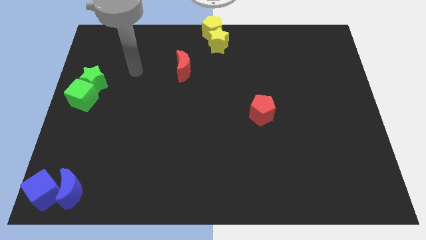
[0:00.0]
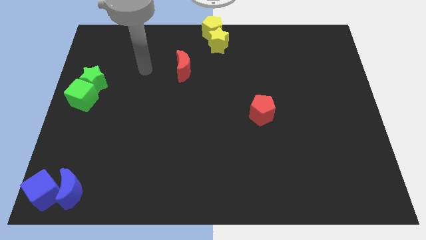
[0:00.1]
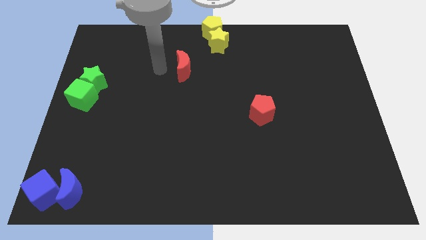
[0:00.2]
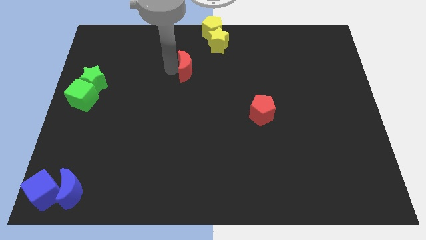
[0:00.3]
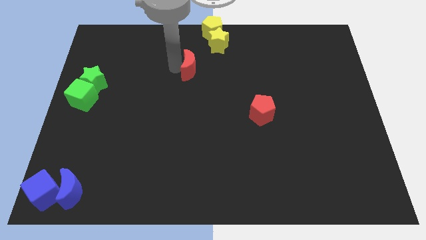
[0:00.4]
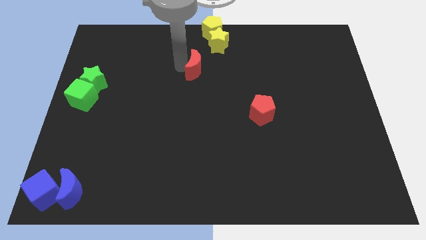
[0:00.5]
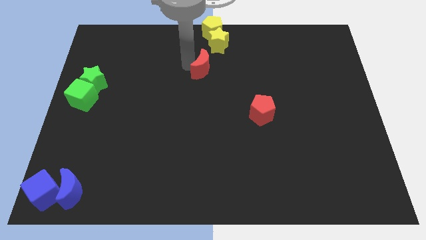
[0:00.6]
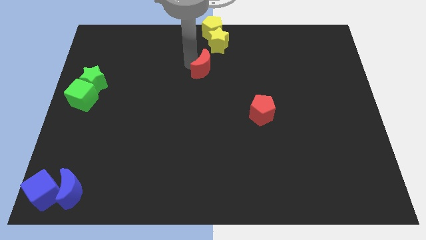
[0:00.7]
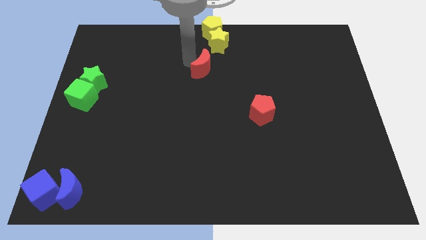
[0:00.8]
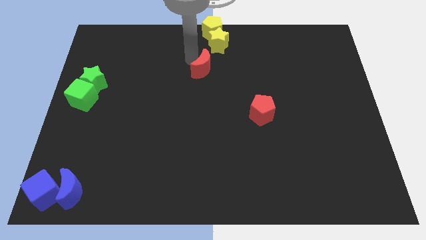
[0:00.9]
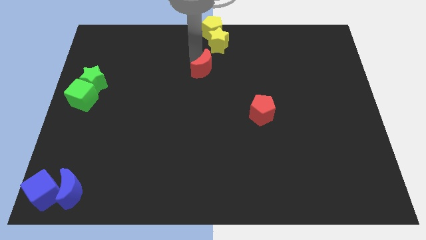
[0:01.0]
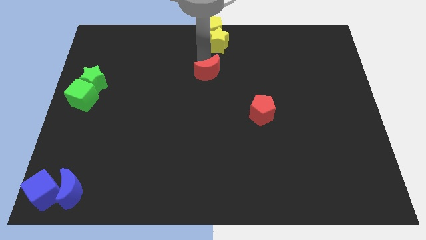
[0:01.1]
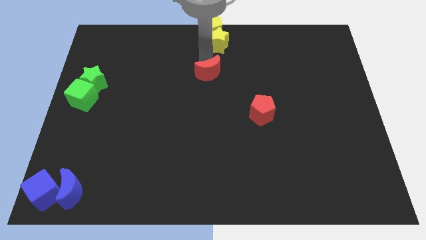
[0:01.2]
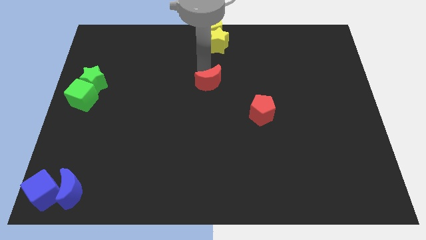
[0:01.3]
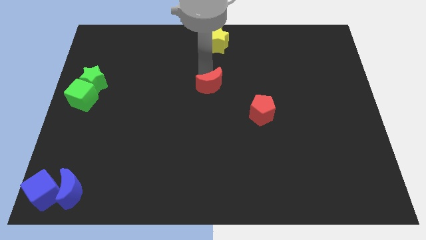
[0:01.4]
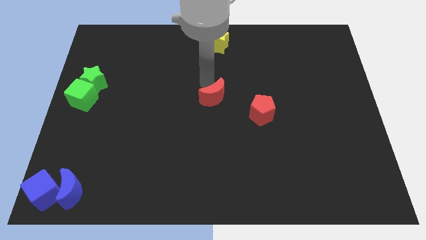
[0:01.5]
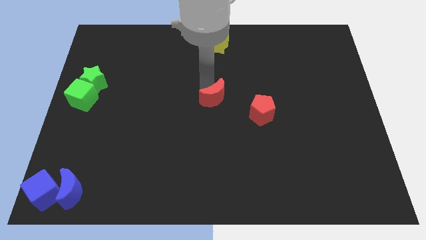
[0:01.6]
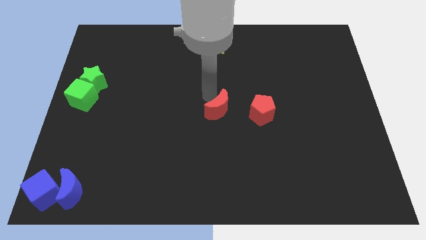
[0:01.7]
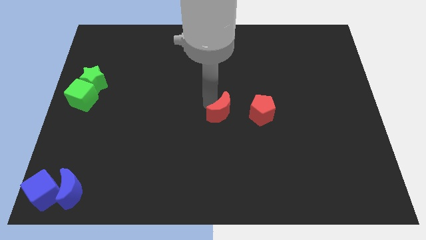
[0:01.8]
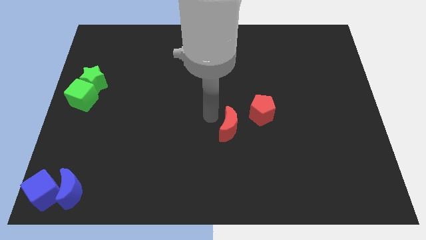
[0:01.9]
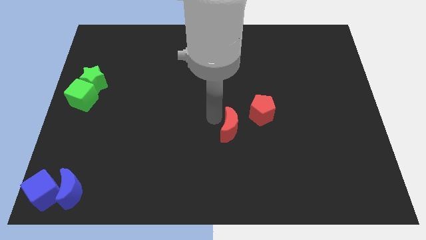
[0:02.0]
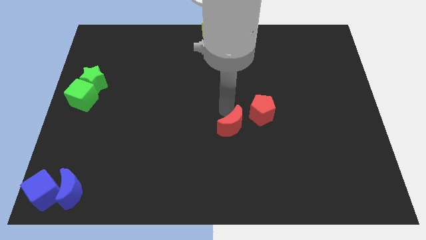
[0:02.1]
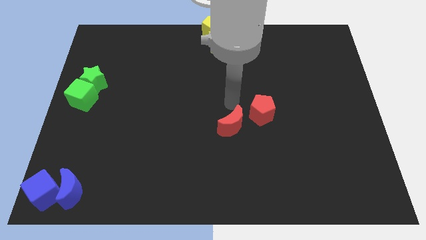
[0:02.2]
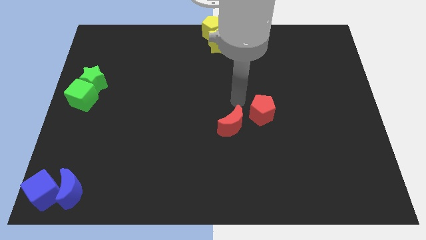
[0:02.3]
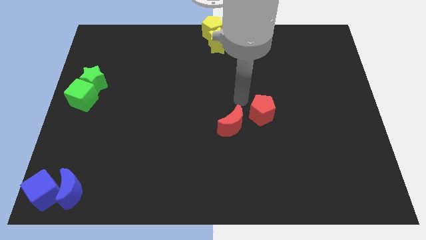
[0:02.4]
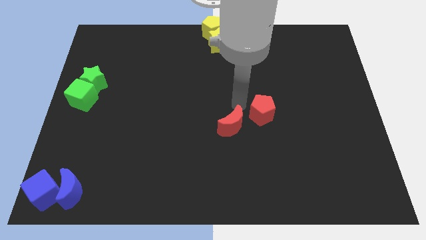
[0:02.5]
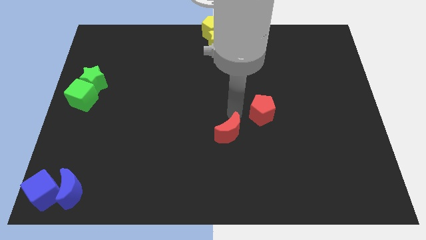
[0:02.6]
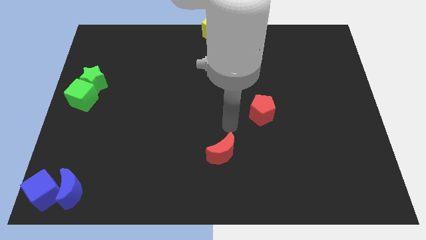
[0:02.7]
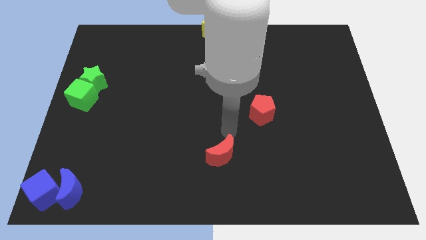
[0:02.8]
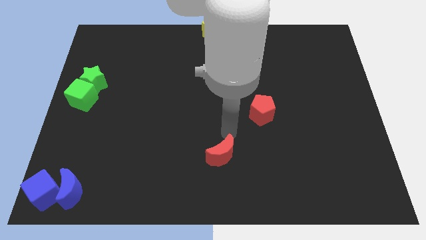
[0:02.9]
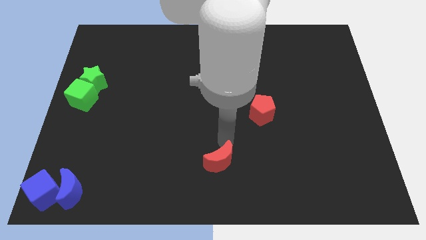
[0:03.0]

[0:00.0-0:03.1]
move the red moon slightly towards the bottom center of the board

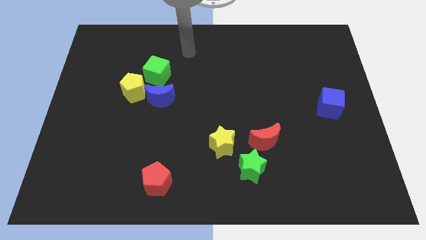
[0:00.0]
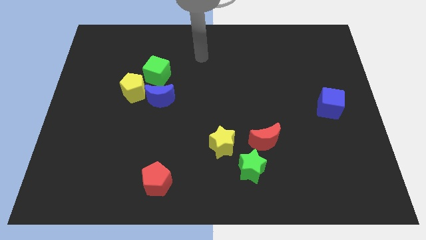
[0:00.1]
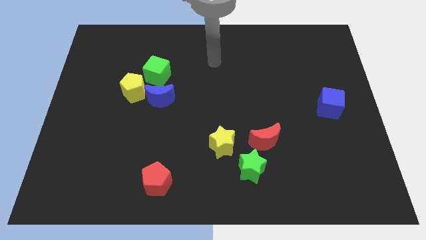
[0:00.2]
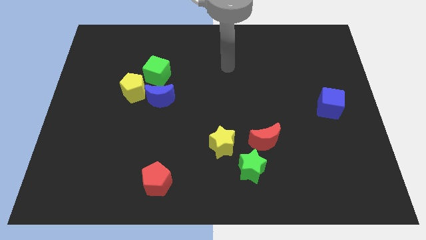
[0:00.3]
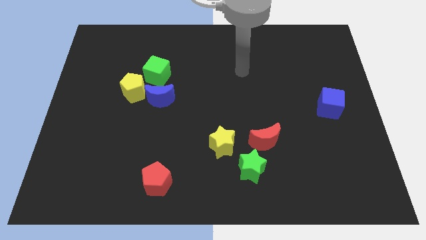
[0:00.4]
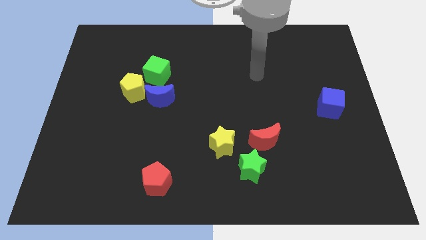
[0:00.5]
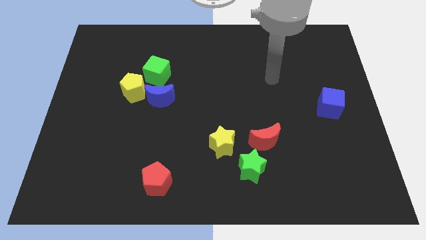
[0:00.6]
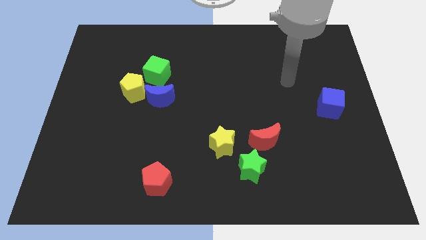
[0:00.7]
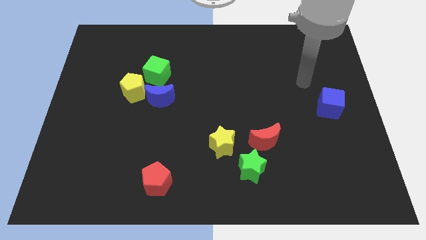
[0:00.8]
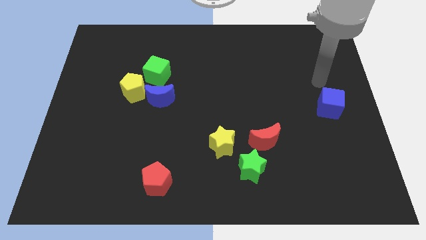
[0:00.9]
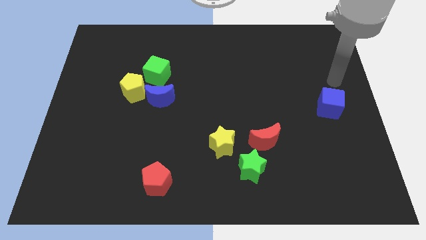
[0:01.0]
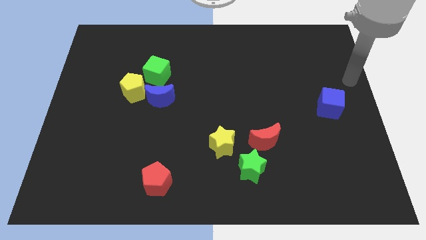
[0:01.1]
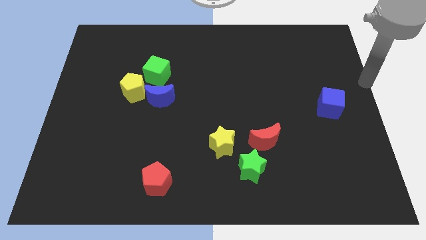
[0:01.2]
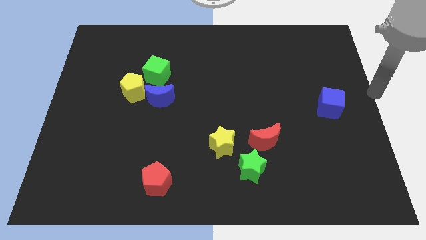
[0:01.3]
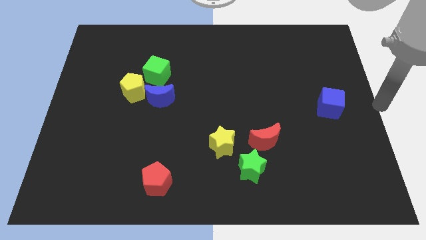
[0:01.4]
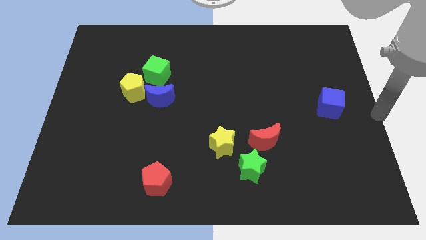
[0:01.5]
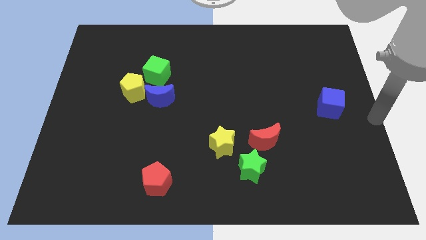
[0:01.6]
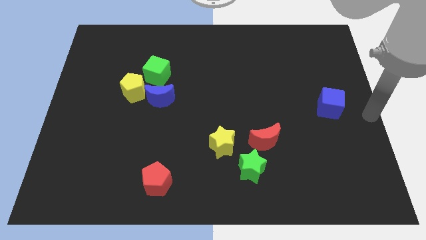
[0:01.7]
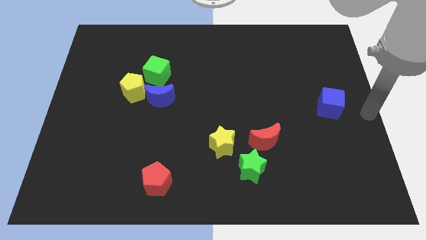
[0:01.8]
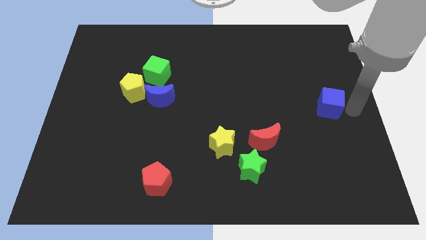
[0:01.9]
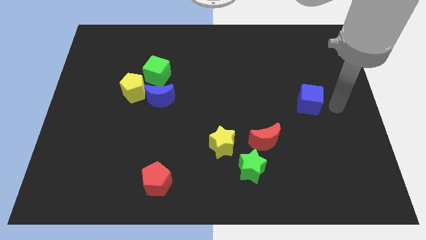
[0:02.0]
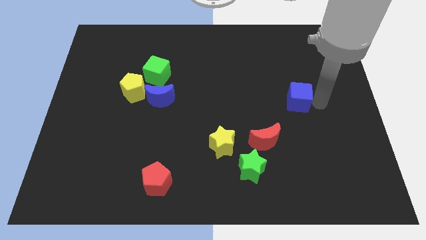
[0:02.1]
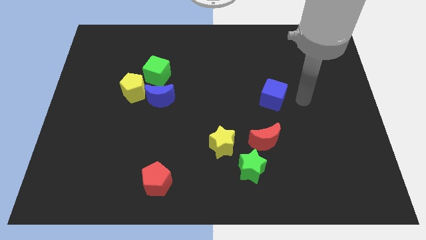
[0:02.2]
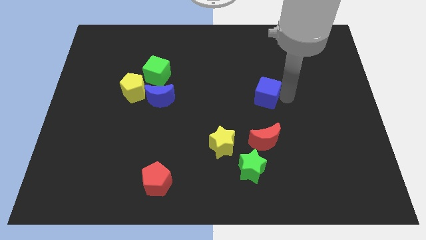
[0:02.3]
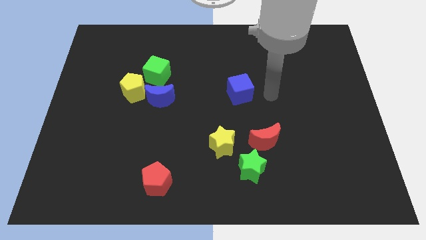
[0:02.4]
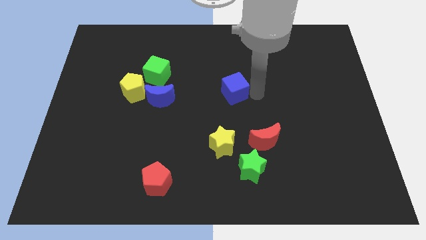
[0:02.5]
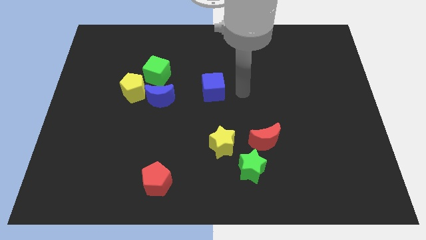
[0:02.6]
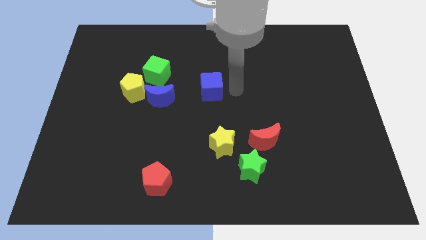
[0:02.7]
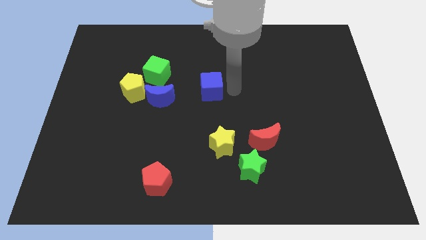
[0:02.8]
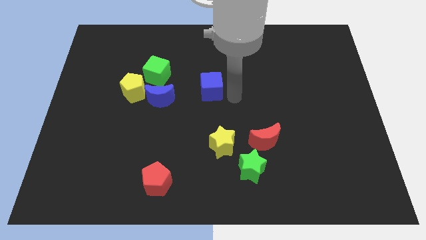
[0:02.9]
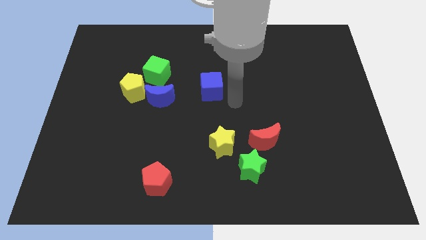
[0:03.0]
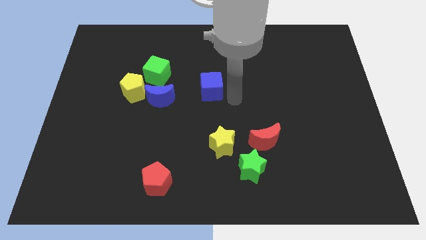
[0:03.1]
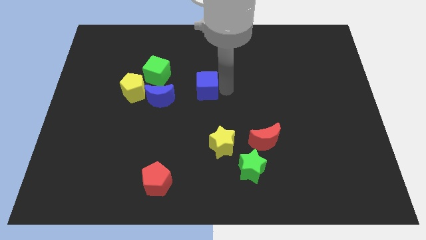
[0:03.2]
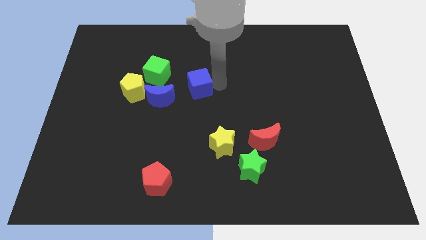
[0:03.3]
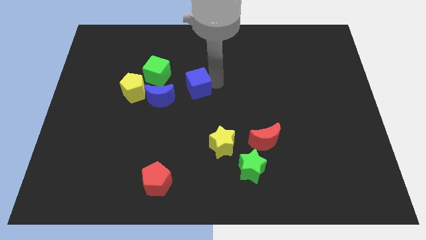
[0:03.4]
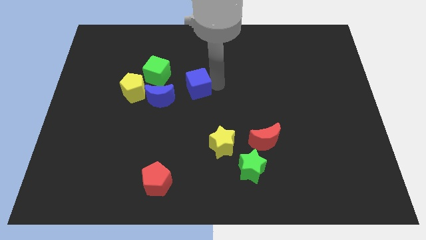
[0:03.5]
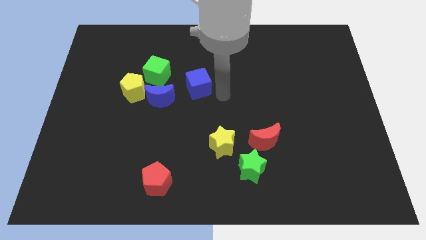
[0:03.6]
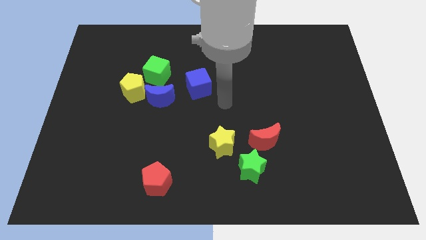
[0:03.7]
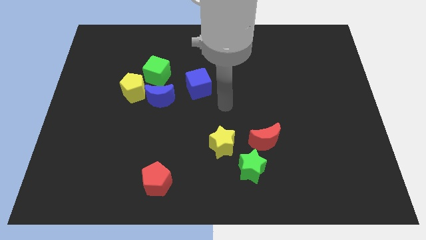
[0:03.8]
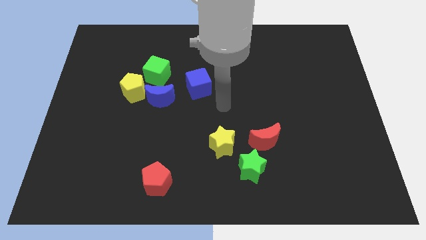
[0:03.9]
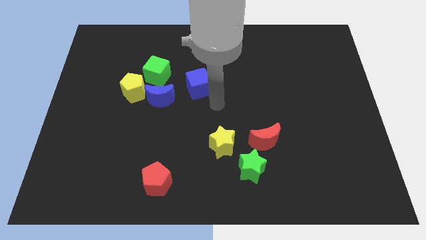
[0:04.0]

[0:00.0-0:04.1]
move blue cube to the right of the blue moon

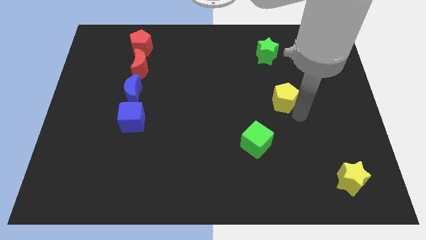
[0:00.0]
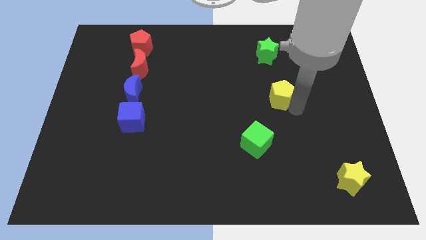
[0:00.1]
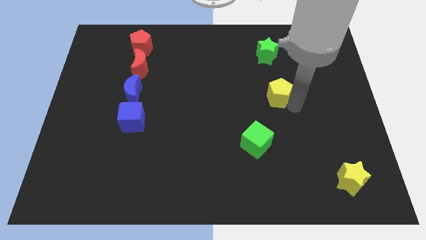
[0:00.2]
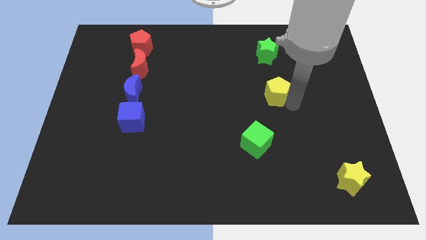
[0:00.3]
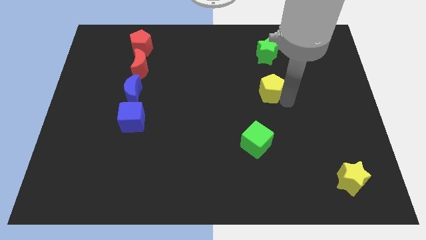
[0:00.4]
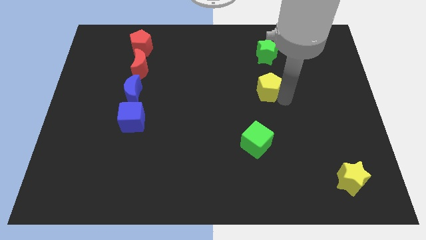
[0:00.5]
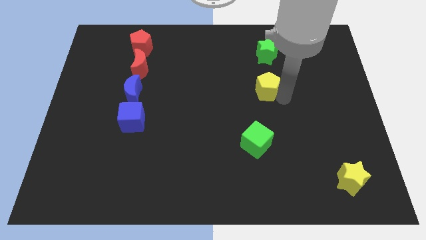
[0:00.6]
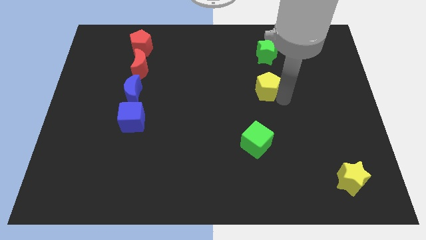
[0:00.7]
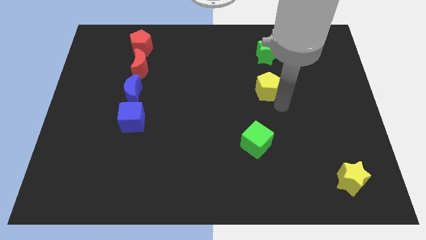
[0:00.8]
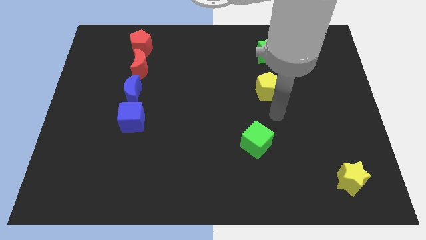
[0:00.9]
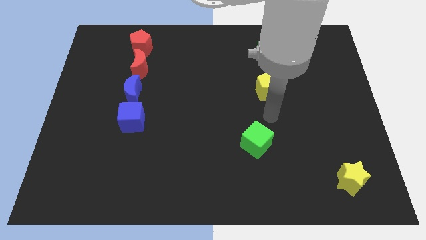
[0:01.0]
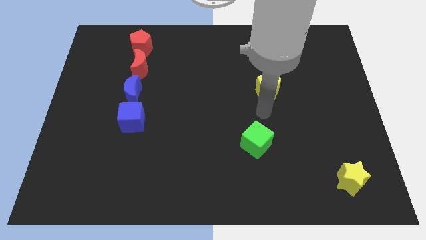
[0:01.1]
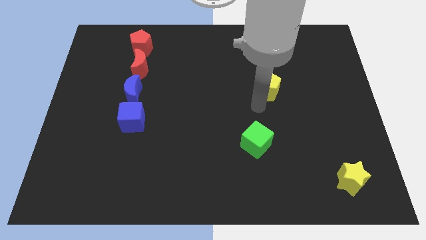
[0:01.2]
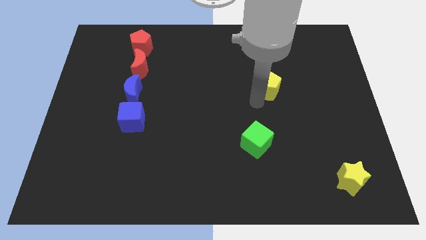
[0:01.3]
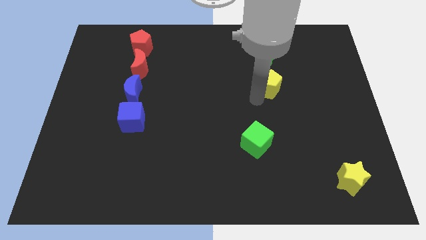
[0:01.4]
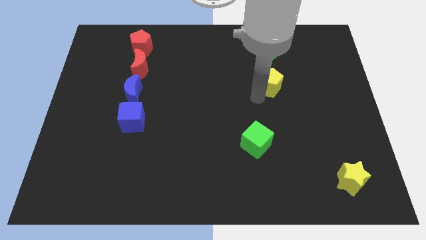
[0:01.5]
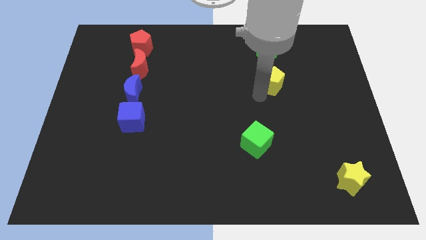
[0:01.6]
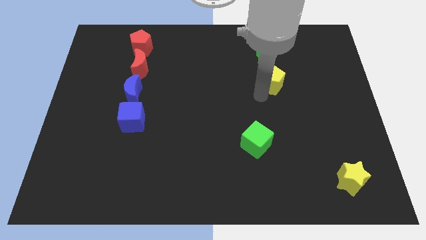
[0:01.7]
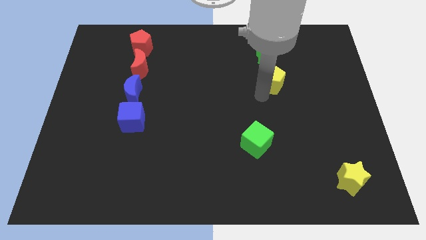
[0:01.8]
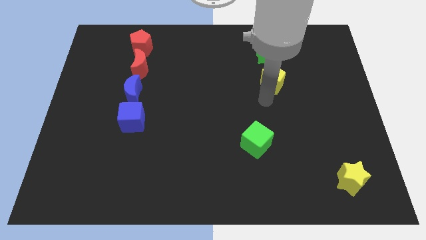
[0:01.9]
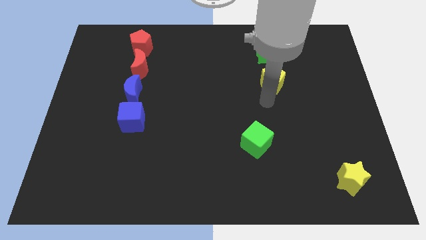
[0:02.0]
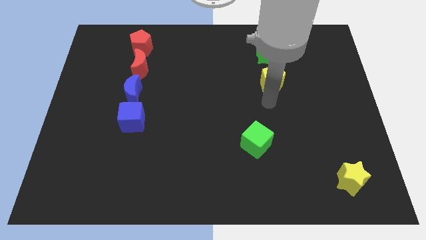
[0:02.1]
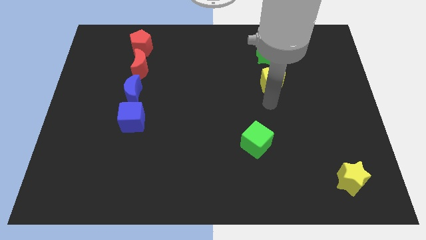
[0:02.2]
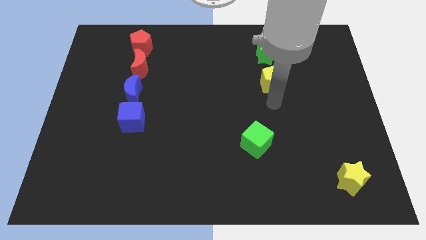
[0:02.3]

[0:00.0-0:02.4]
place yellow pentagon below green star
